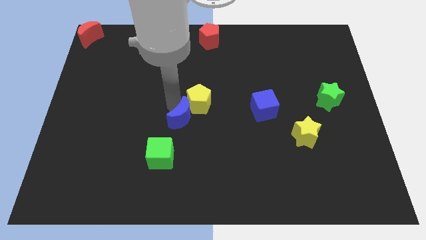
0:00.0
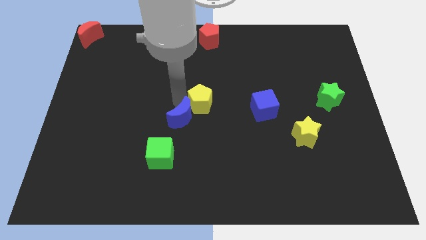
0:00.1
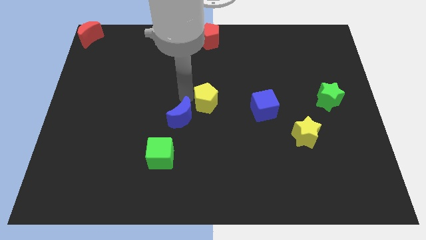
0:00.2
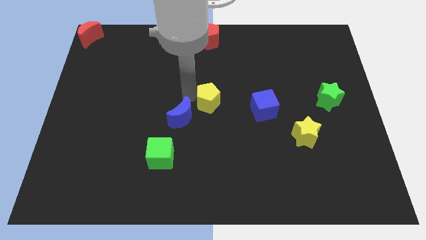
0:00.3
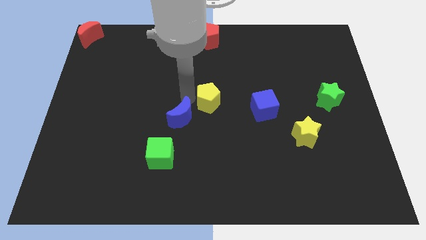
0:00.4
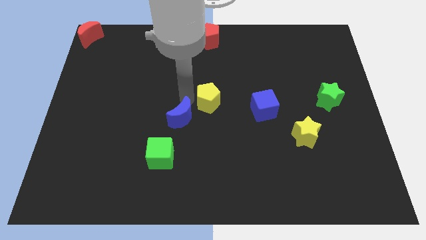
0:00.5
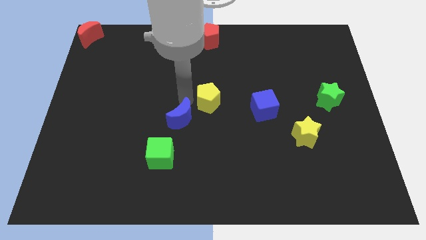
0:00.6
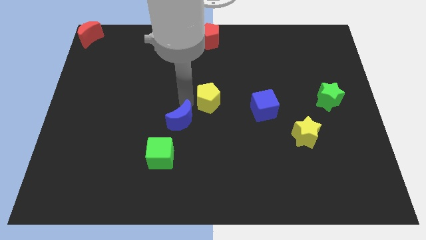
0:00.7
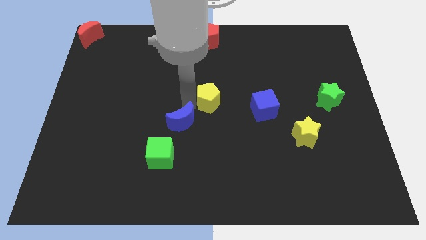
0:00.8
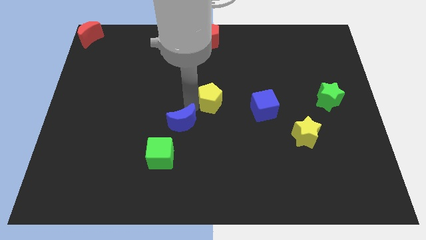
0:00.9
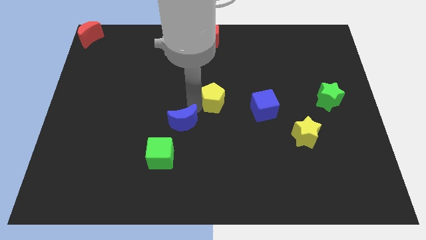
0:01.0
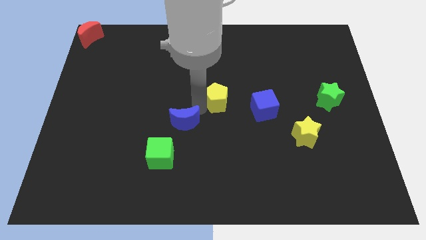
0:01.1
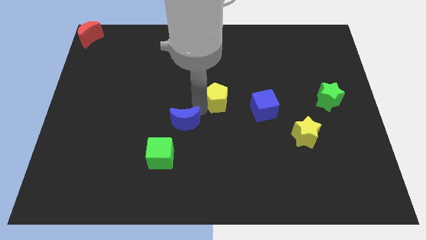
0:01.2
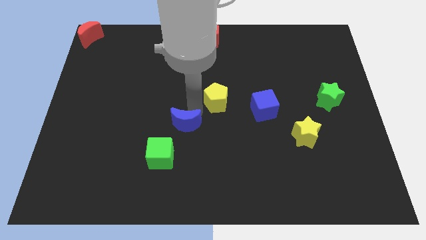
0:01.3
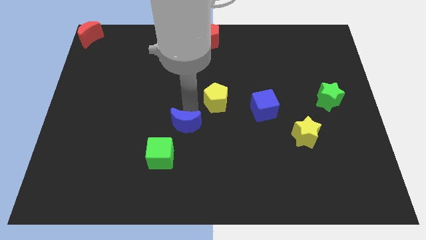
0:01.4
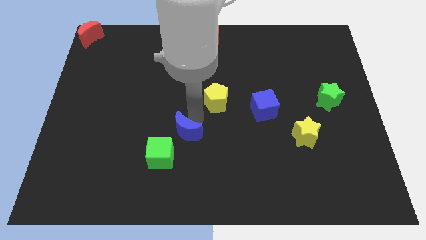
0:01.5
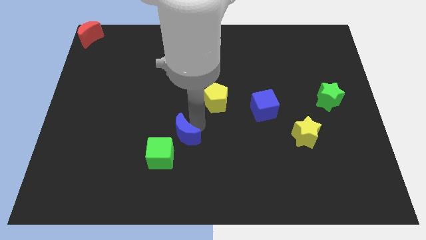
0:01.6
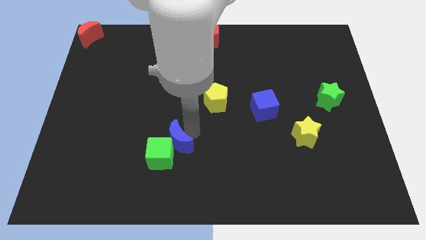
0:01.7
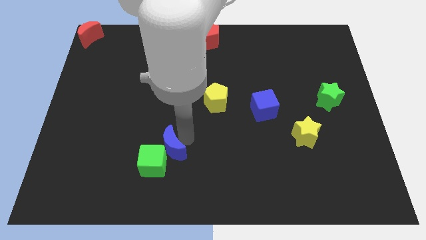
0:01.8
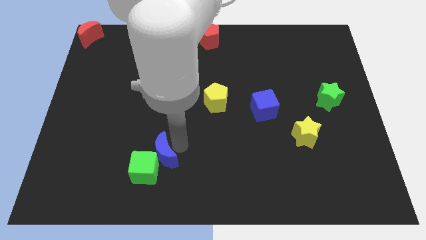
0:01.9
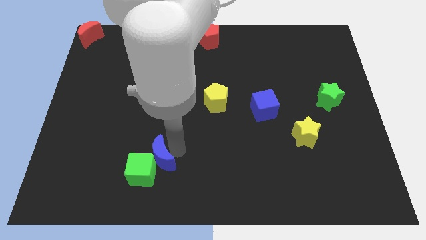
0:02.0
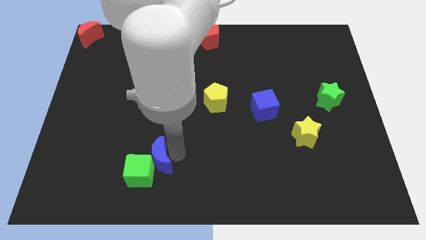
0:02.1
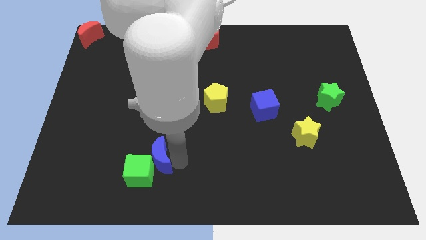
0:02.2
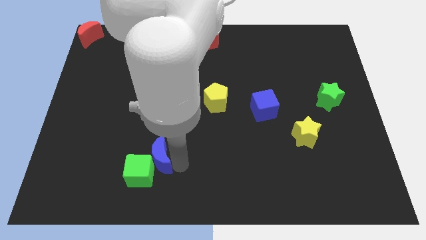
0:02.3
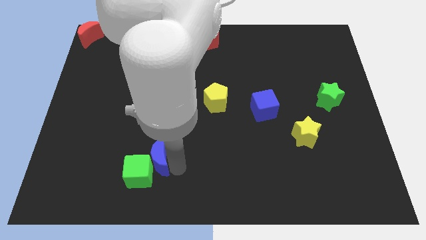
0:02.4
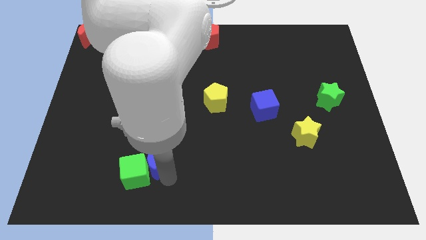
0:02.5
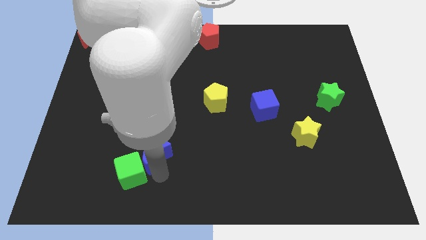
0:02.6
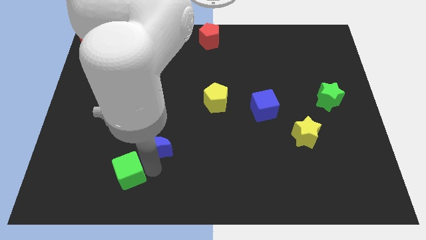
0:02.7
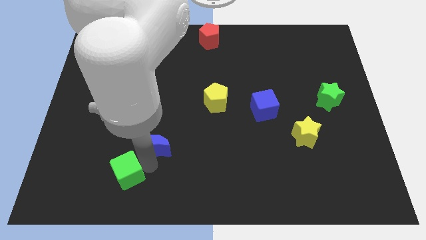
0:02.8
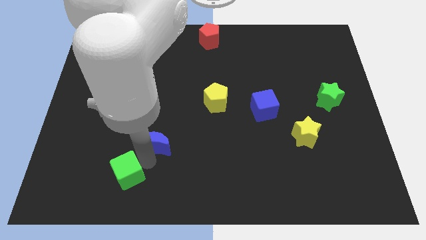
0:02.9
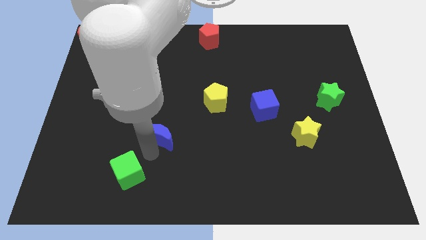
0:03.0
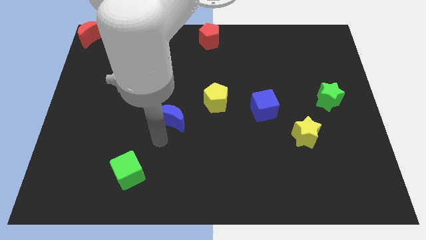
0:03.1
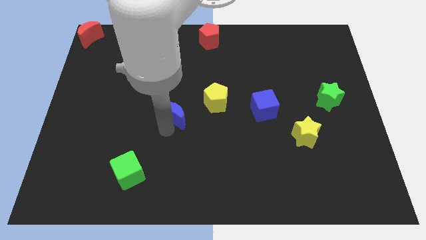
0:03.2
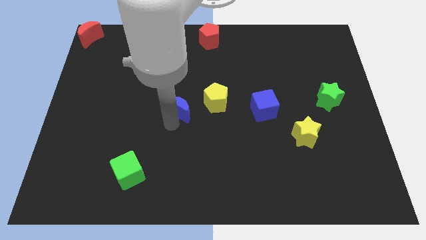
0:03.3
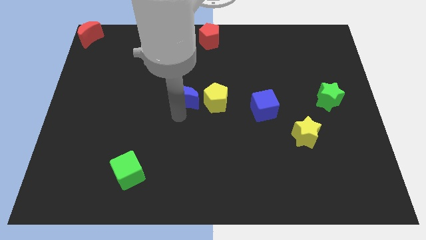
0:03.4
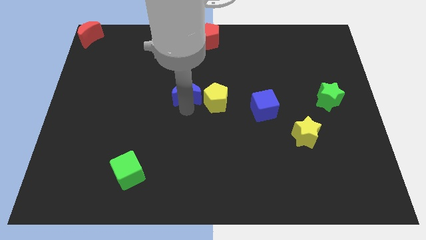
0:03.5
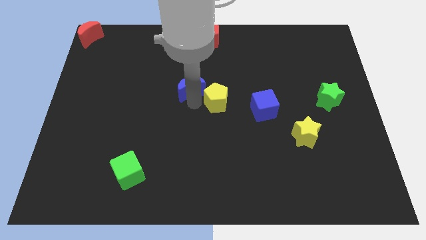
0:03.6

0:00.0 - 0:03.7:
move the blue crescent to the left top of the yellow pentagon

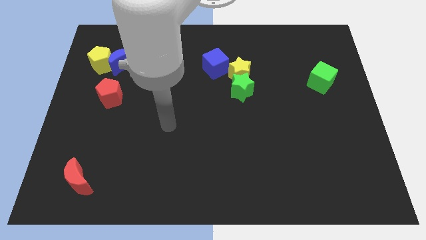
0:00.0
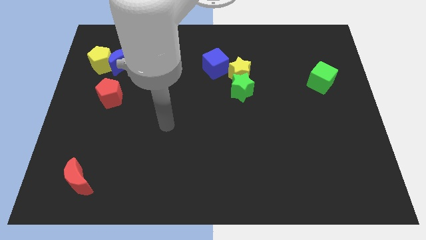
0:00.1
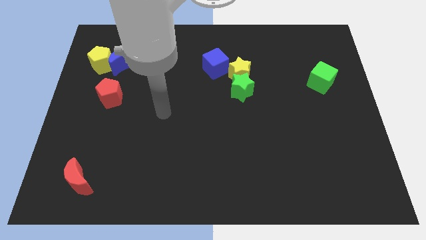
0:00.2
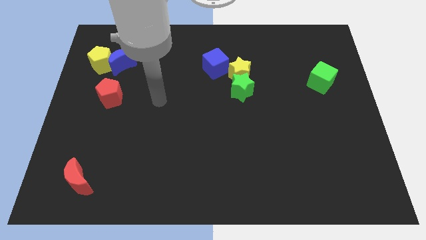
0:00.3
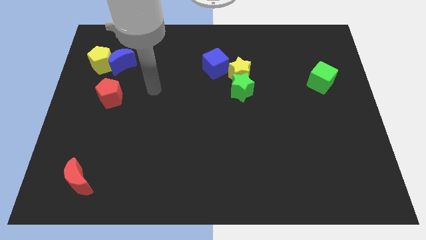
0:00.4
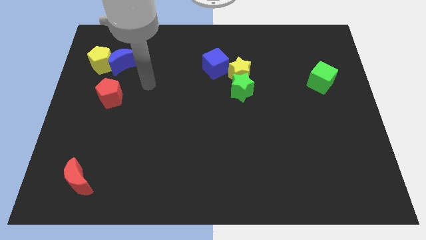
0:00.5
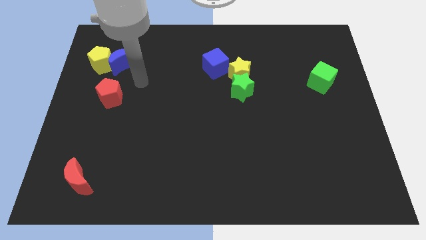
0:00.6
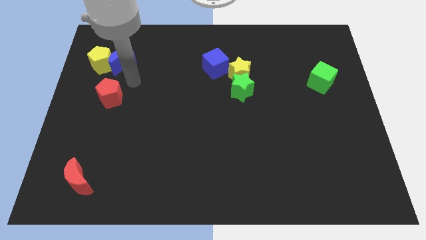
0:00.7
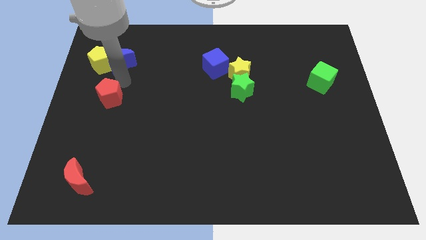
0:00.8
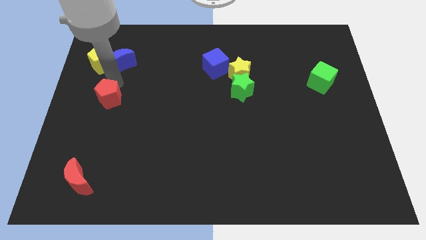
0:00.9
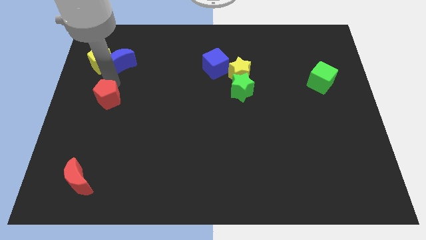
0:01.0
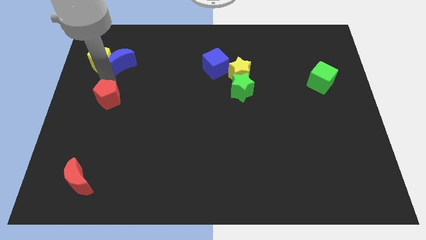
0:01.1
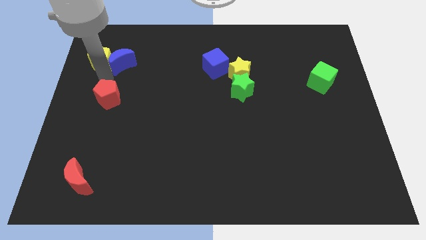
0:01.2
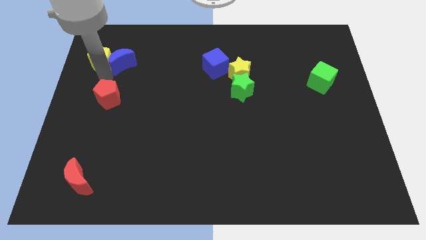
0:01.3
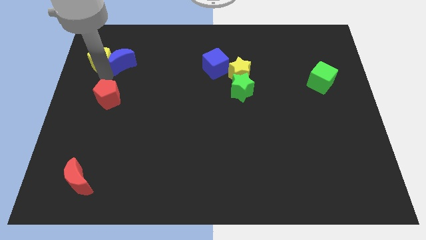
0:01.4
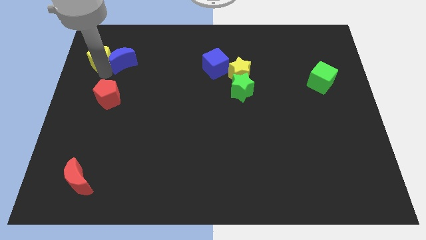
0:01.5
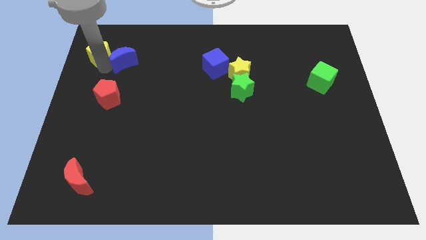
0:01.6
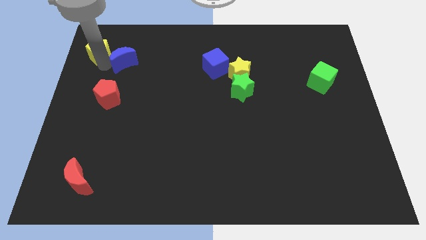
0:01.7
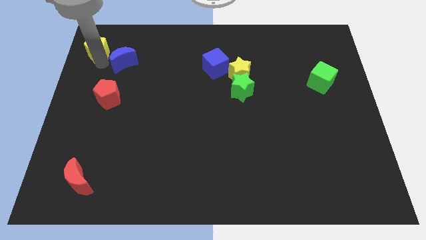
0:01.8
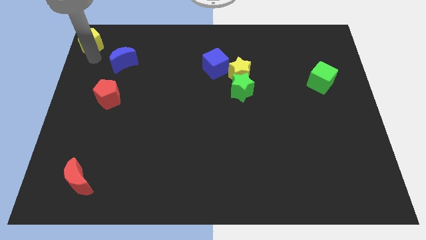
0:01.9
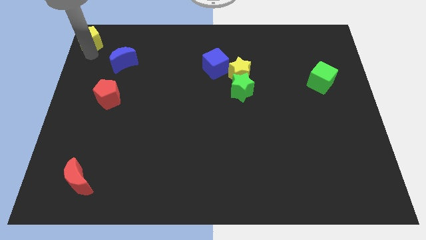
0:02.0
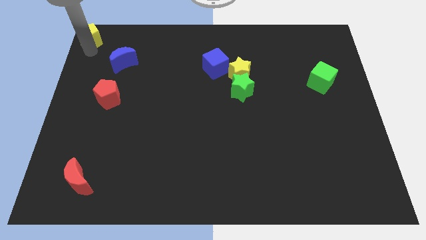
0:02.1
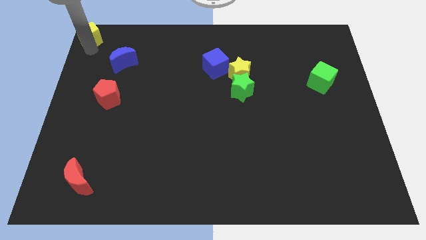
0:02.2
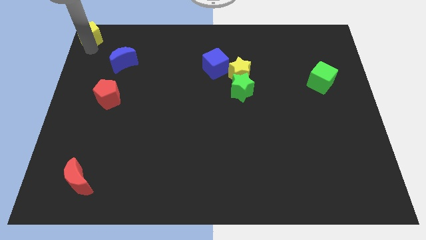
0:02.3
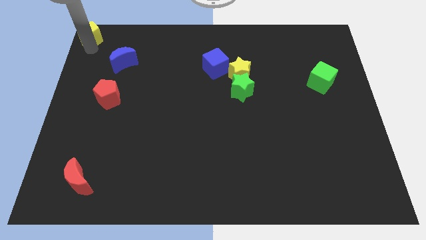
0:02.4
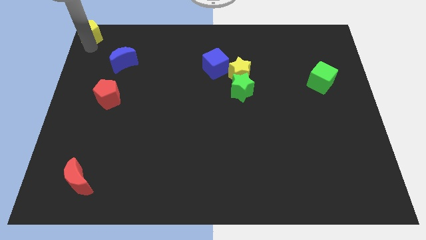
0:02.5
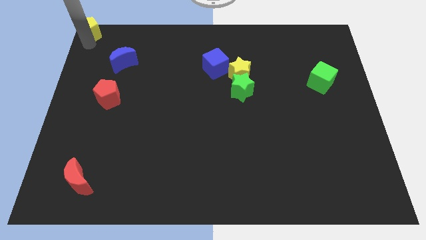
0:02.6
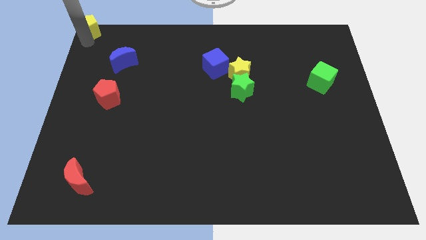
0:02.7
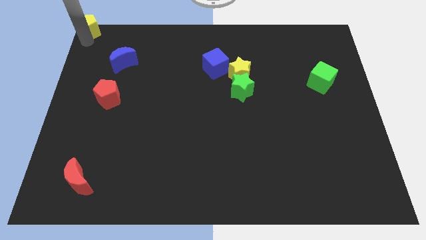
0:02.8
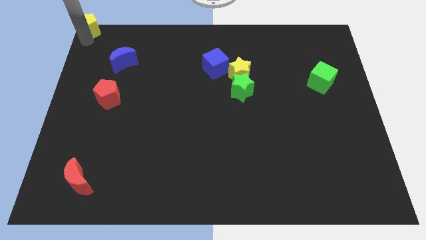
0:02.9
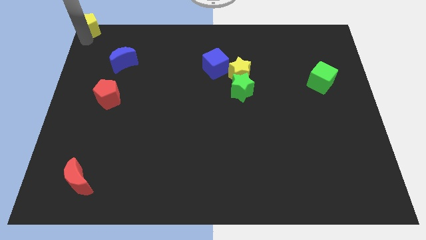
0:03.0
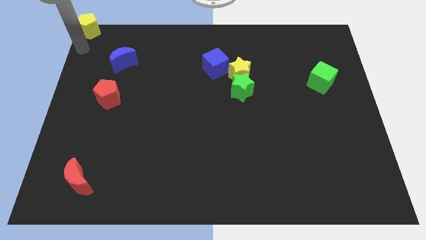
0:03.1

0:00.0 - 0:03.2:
place yellow pentagon towards top left corner

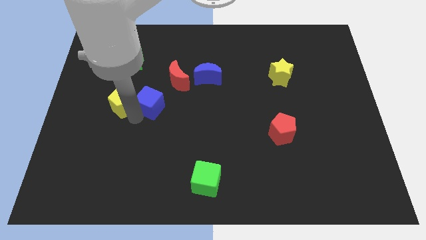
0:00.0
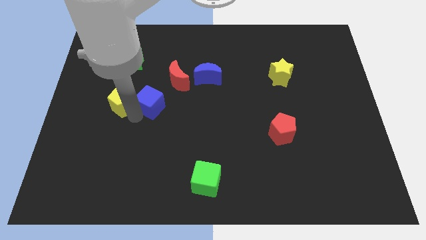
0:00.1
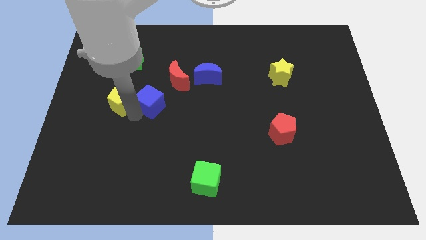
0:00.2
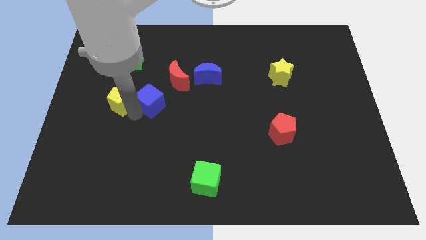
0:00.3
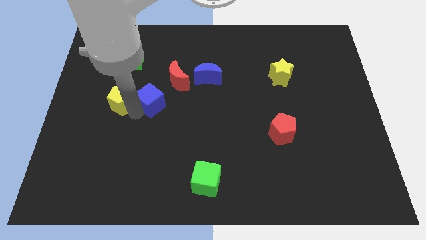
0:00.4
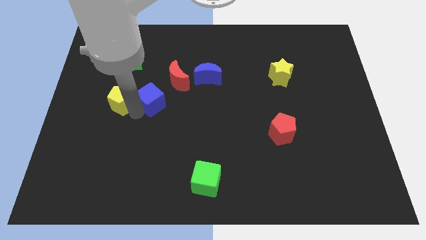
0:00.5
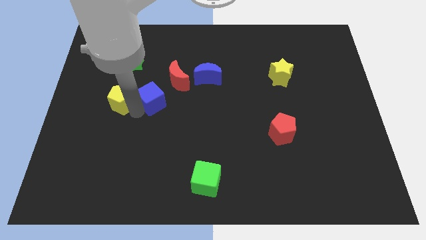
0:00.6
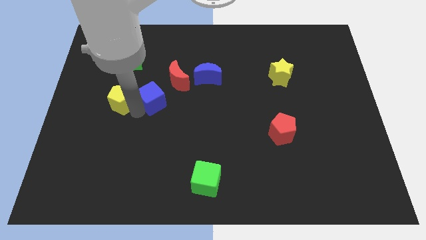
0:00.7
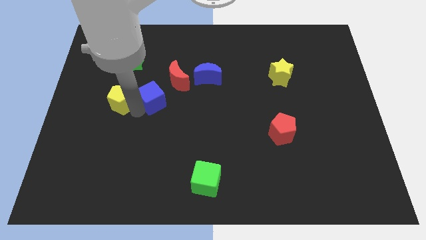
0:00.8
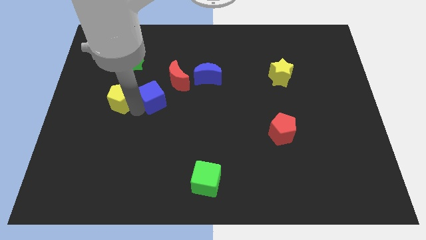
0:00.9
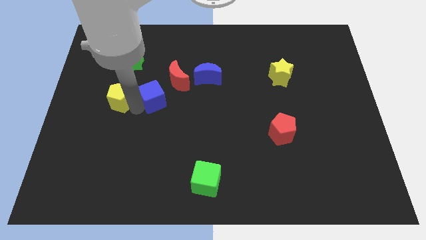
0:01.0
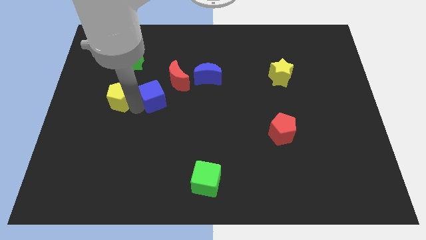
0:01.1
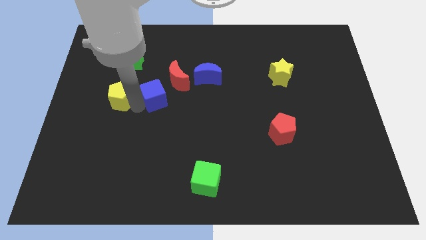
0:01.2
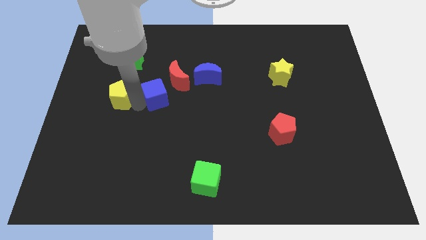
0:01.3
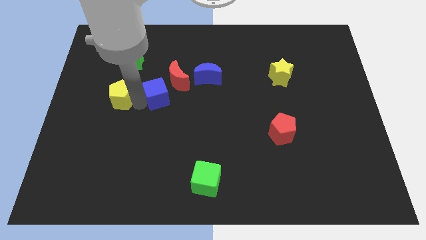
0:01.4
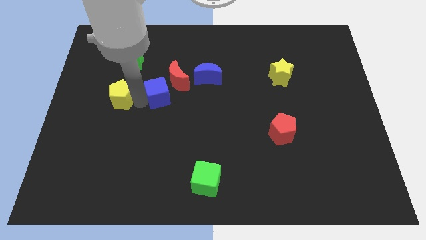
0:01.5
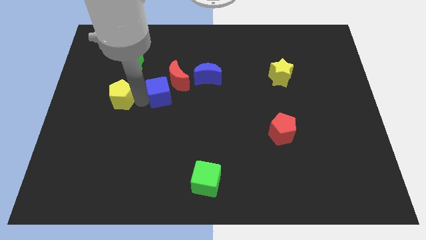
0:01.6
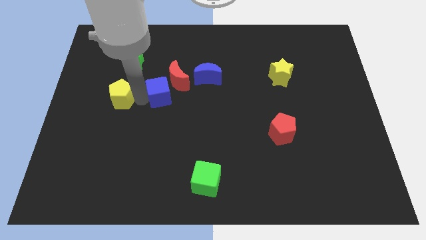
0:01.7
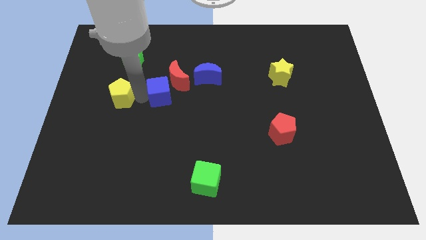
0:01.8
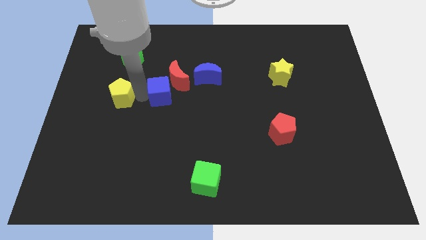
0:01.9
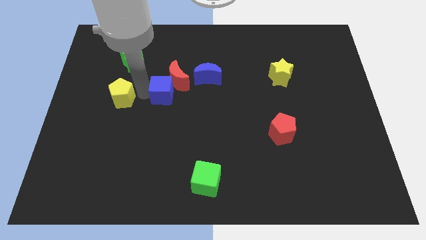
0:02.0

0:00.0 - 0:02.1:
move the blue cube into the red moon

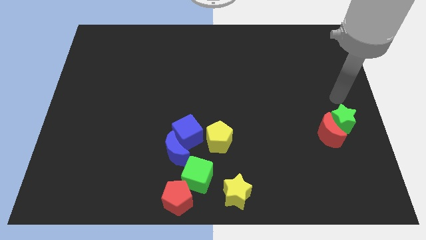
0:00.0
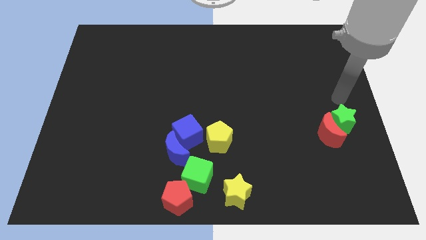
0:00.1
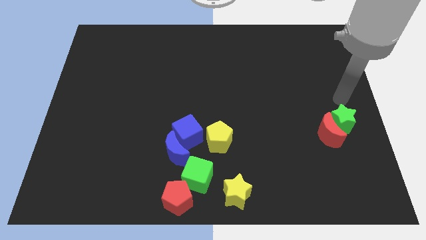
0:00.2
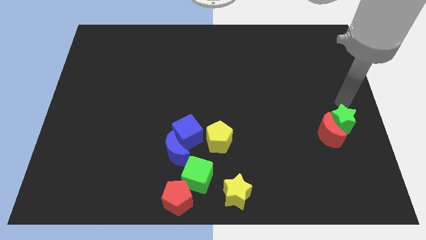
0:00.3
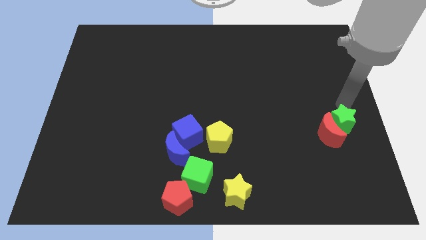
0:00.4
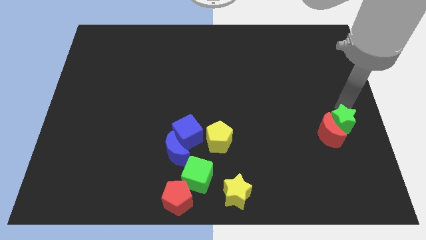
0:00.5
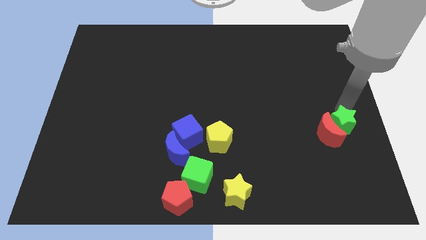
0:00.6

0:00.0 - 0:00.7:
point your arm at the top of green star
